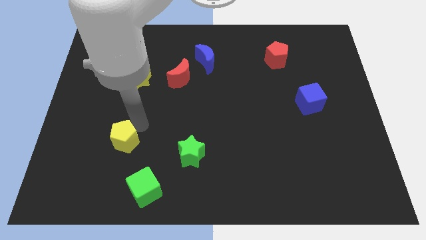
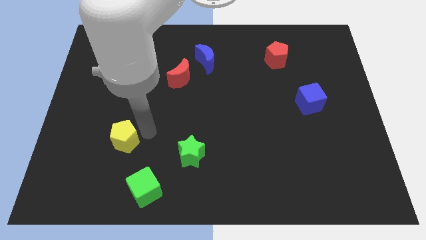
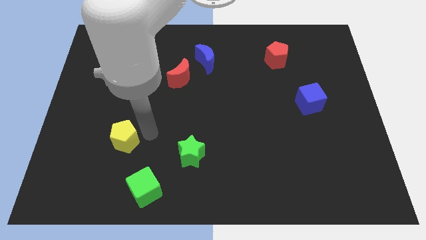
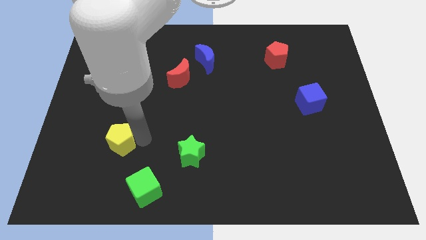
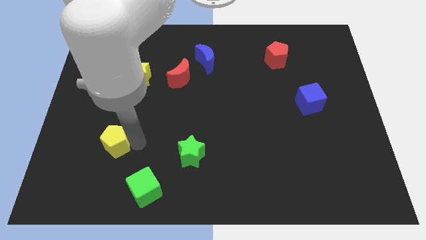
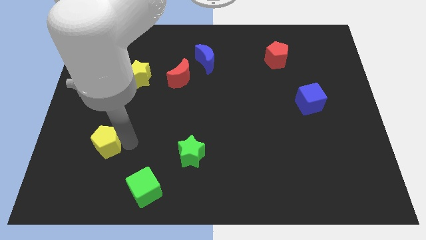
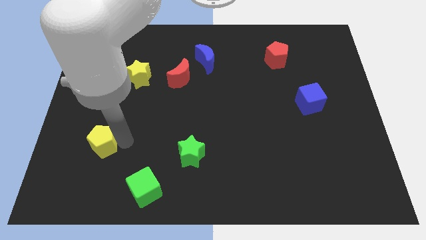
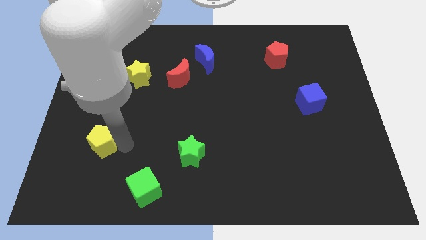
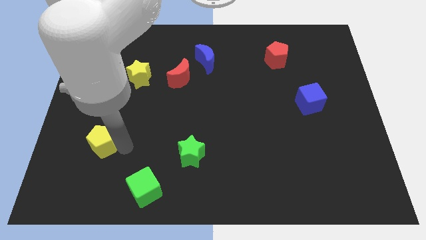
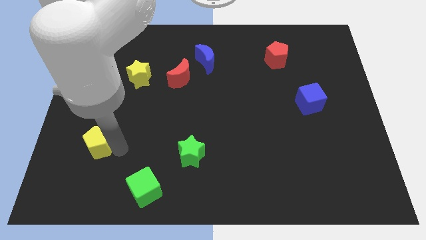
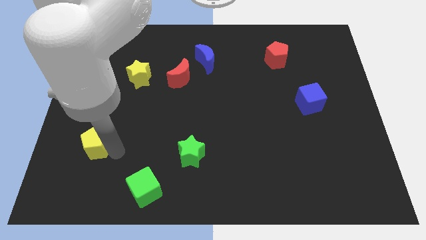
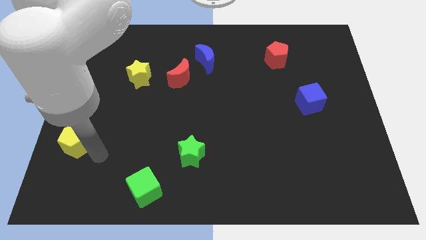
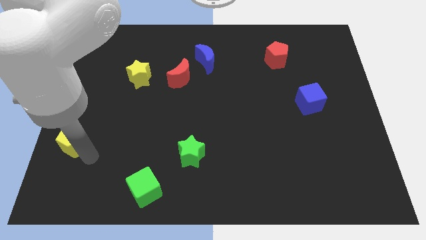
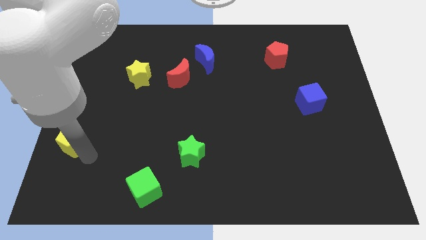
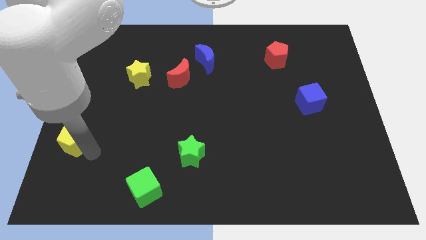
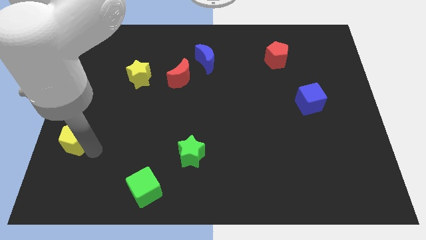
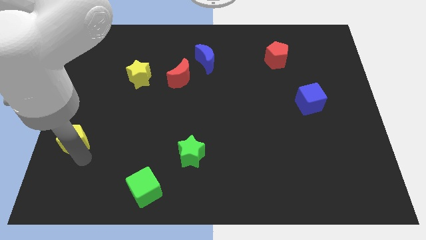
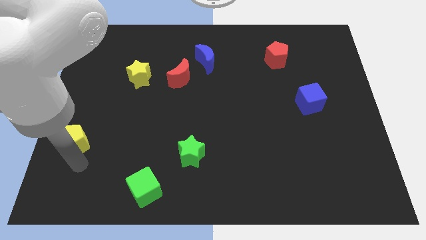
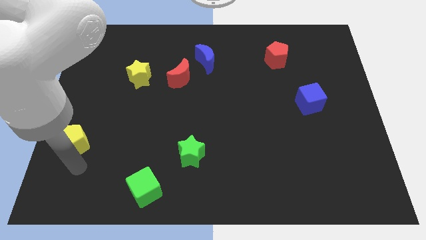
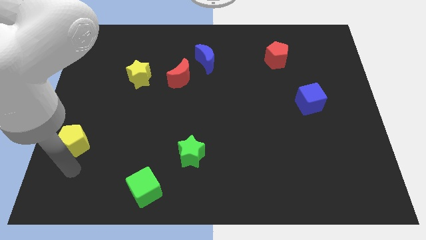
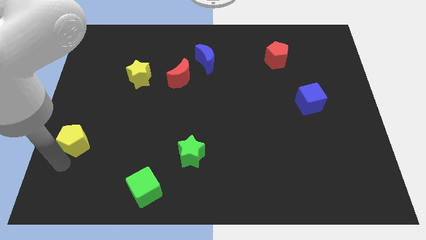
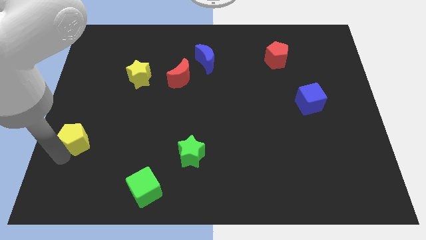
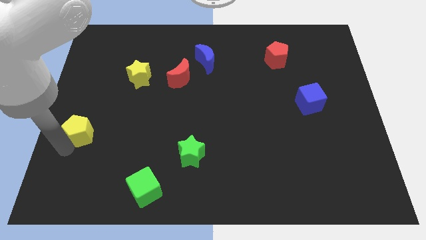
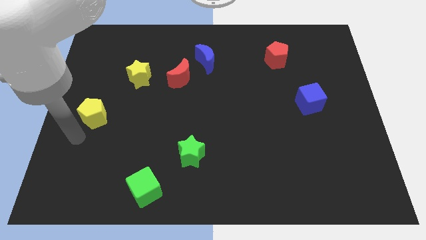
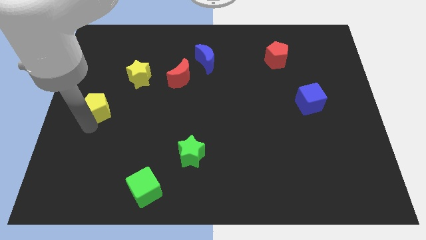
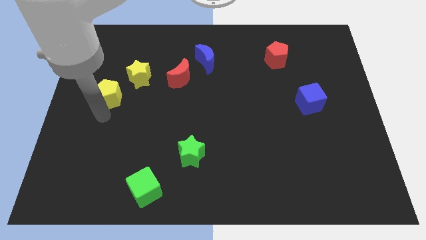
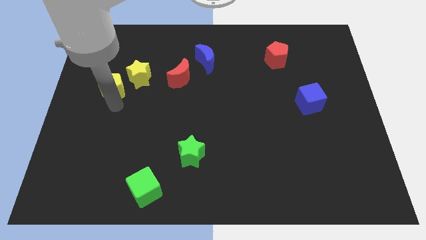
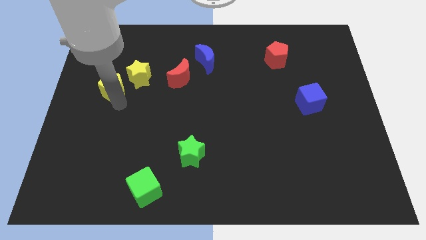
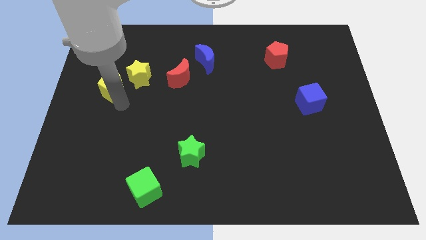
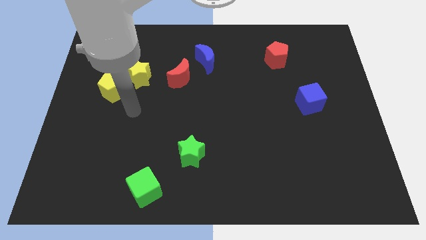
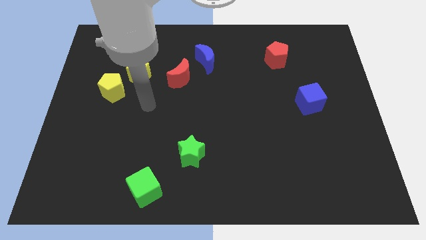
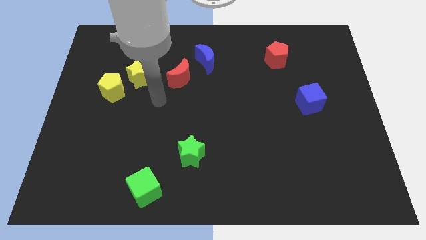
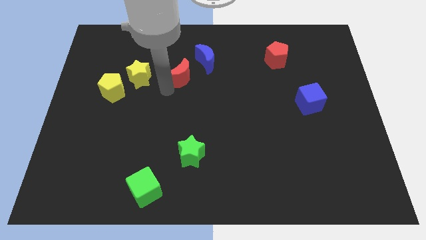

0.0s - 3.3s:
move the yellow pentagon towards the yellow star

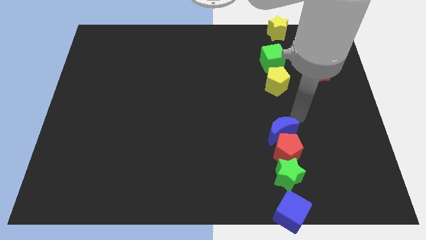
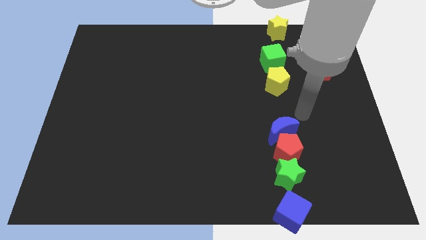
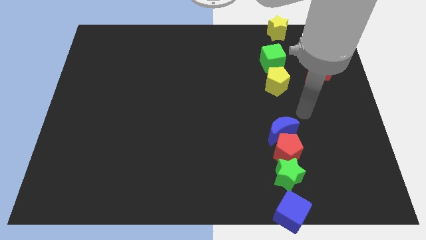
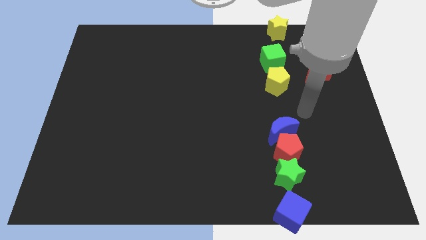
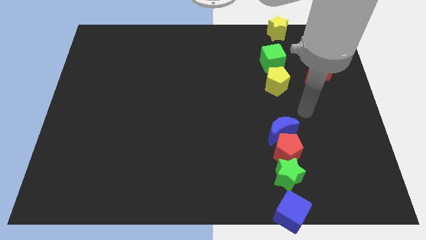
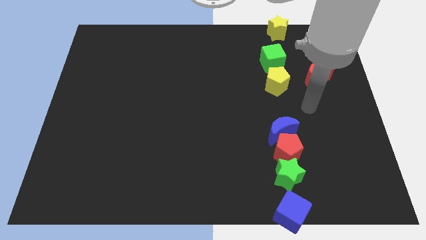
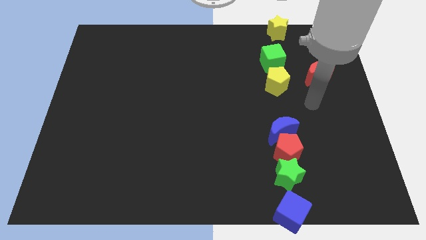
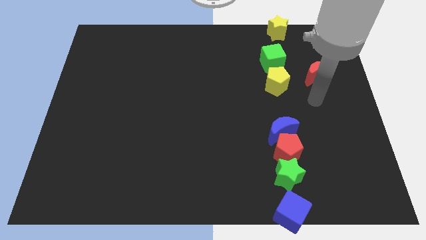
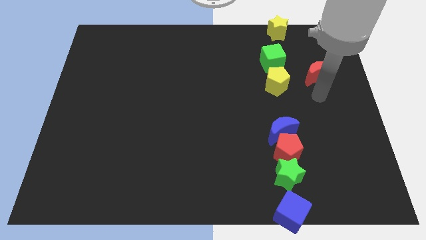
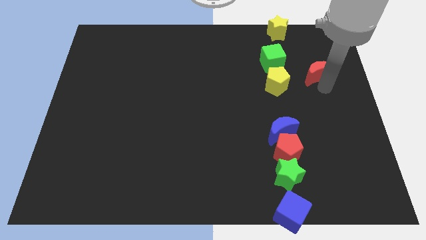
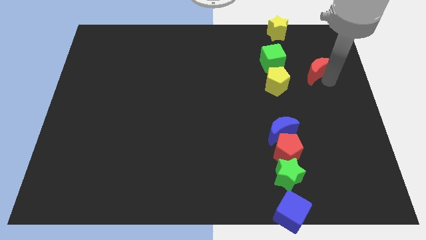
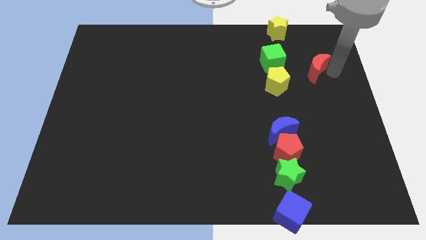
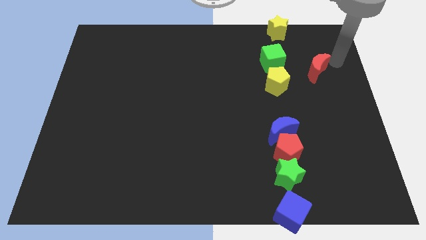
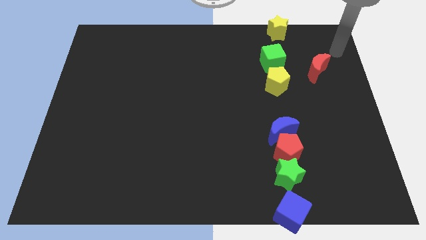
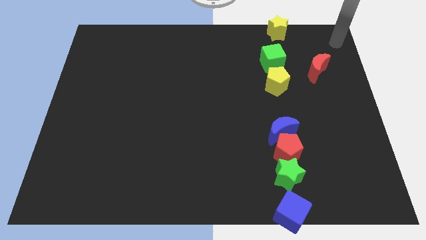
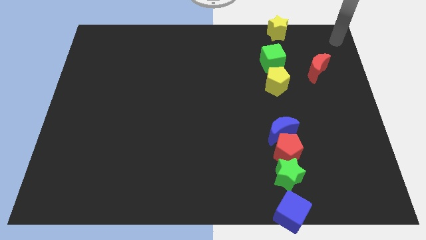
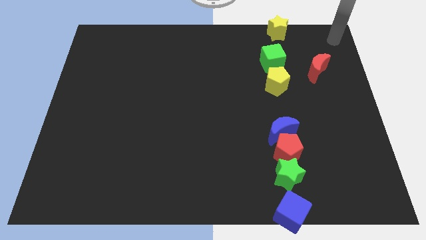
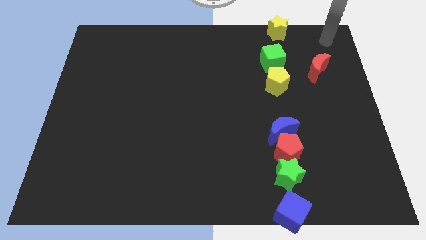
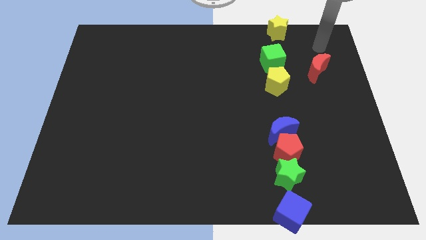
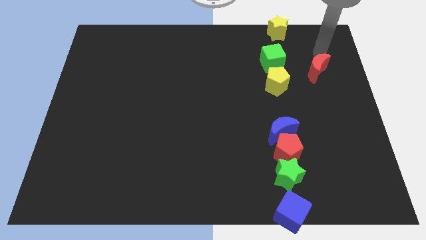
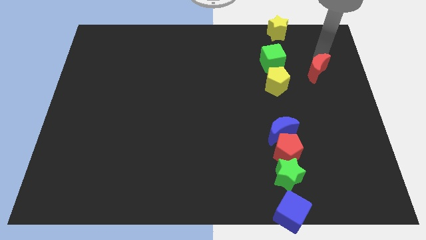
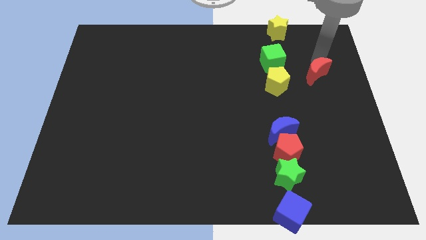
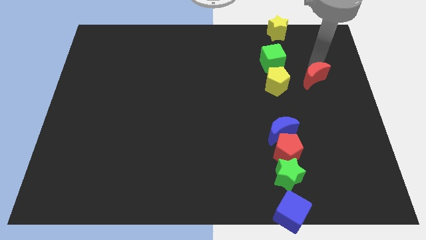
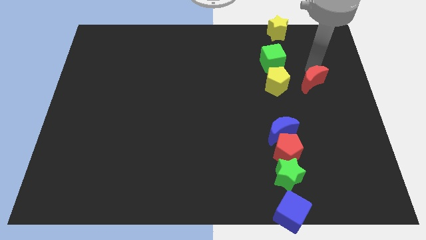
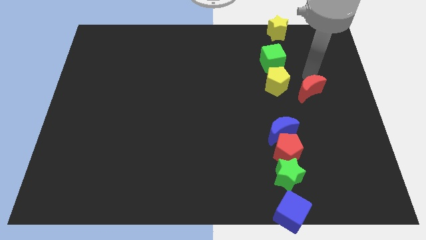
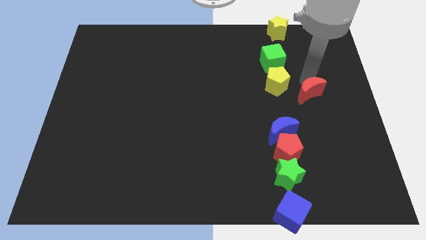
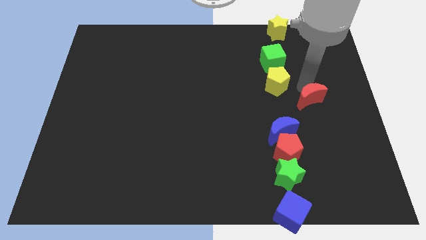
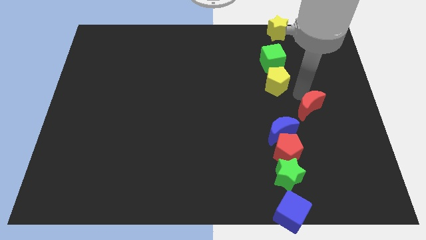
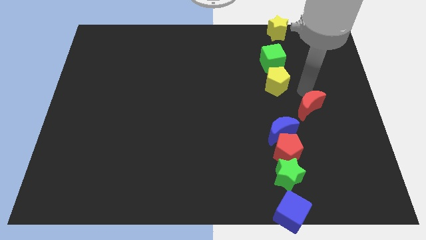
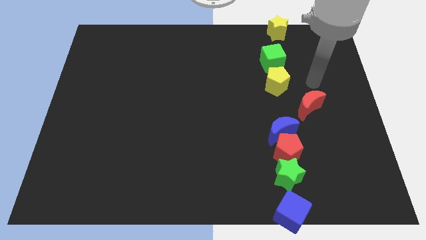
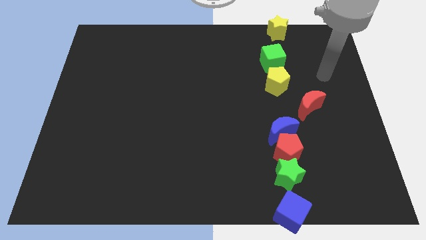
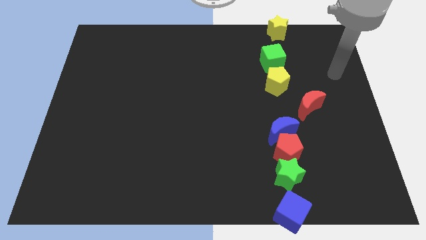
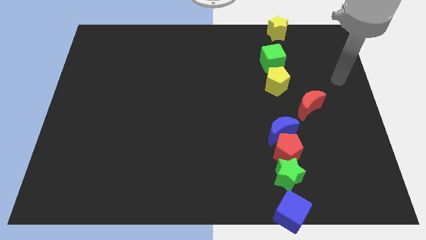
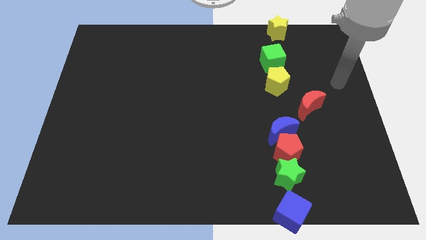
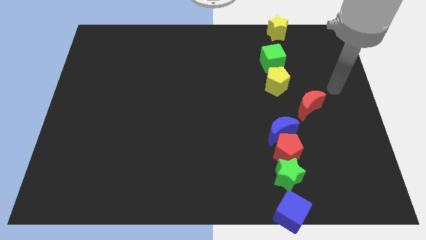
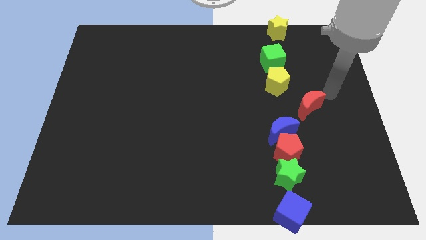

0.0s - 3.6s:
bring the red moon towards the blue moon

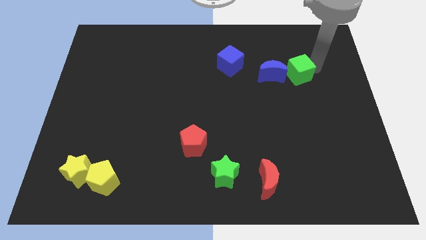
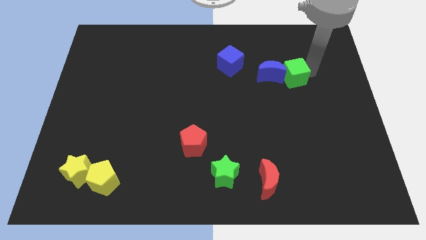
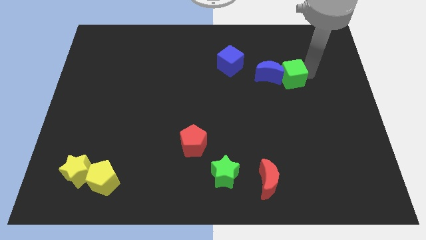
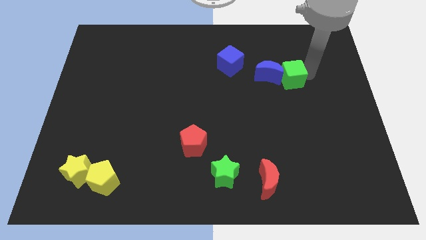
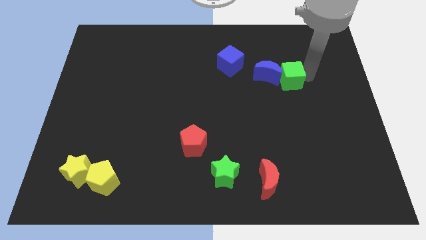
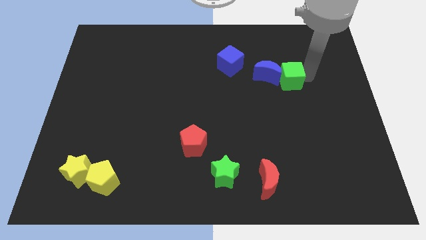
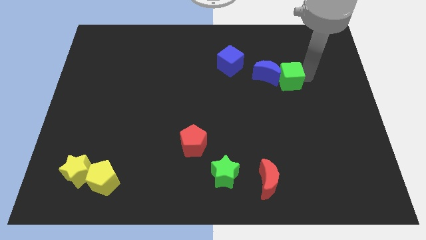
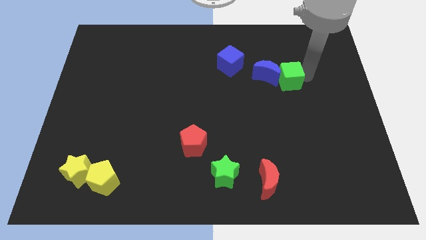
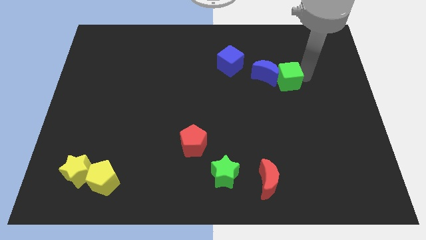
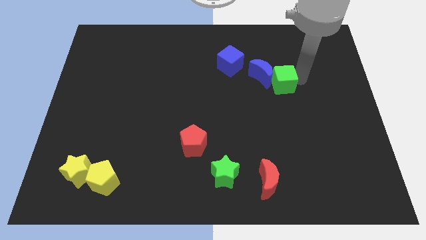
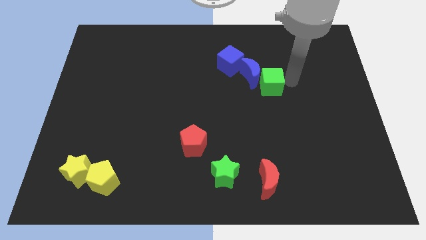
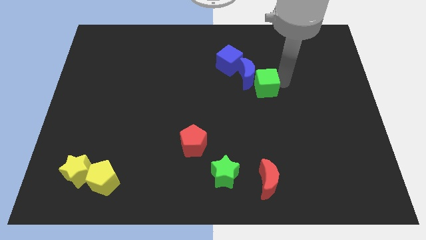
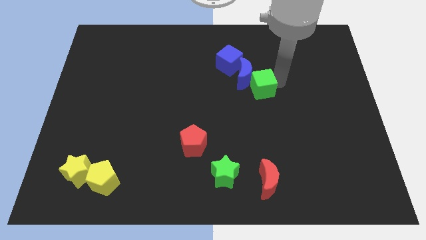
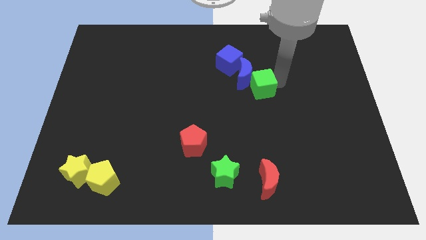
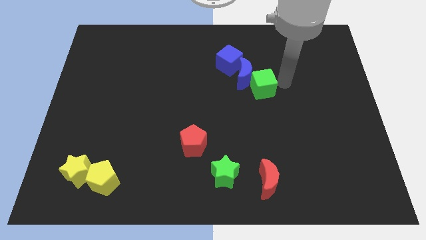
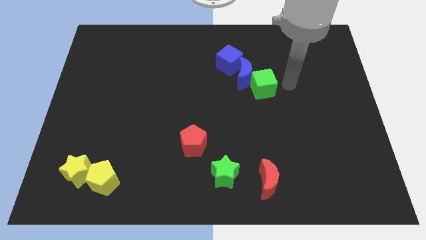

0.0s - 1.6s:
push the green cube into the blue crescent towards the blue cube

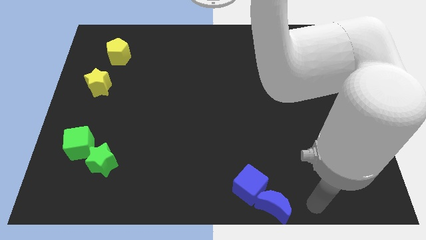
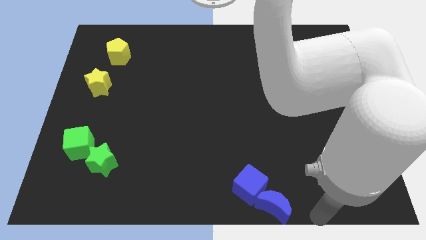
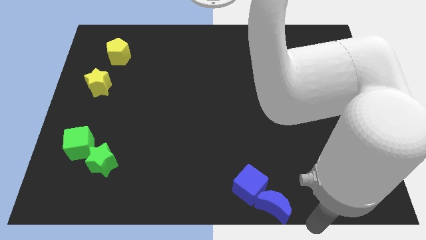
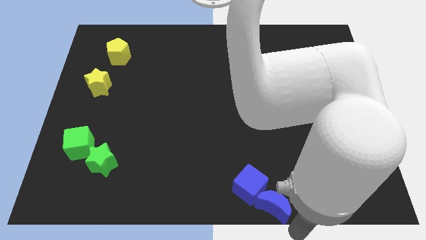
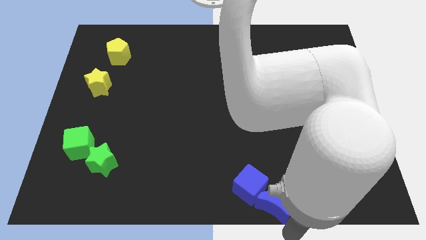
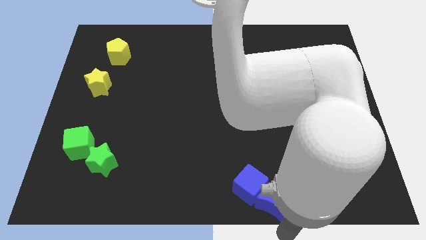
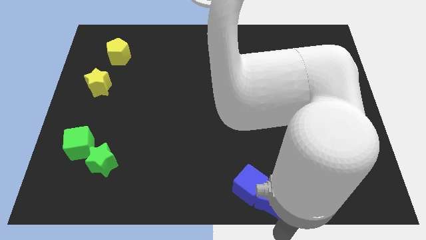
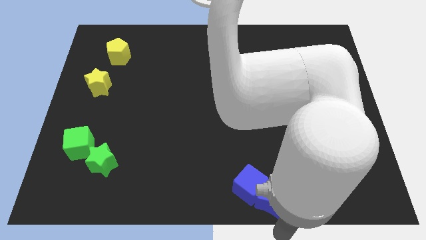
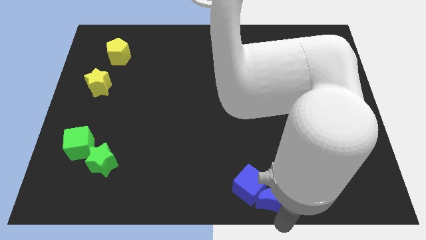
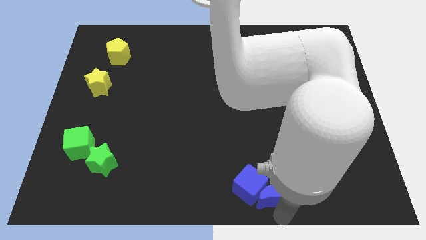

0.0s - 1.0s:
slightly push the blue moon
